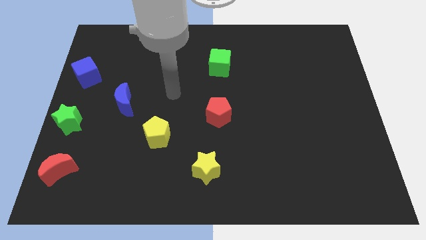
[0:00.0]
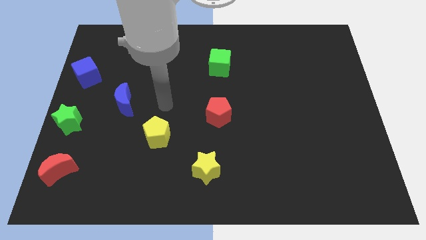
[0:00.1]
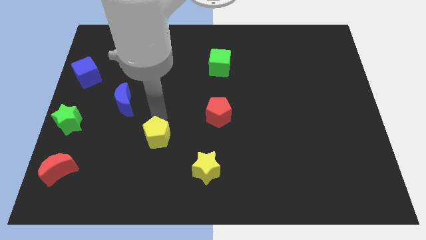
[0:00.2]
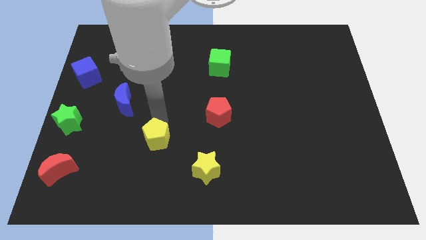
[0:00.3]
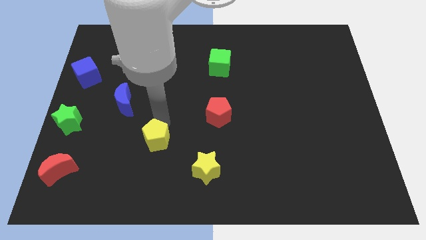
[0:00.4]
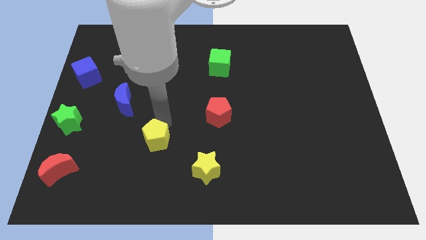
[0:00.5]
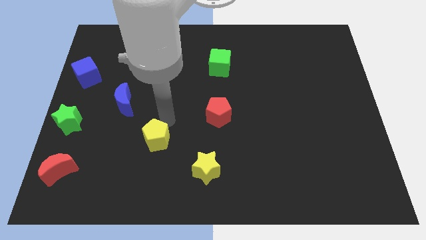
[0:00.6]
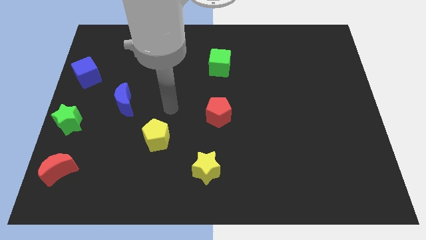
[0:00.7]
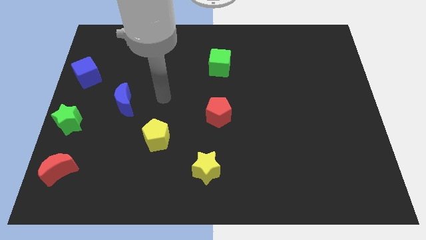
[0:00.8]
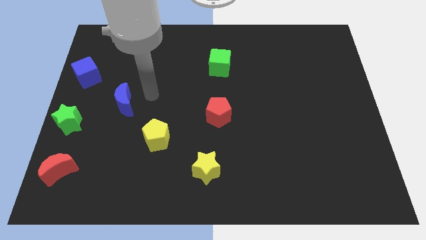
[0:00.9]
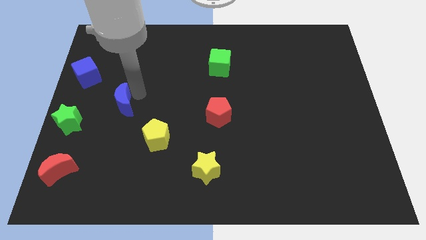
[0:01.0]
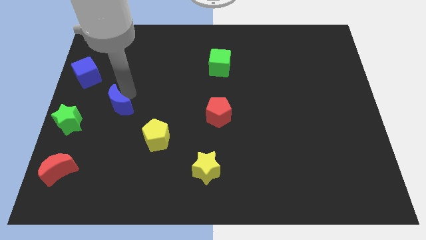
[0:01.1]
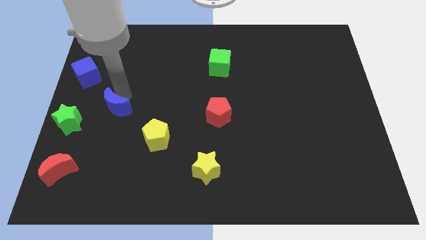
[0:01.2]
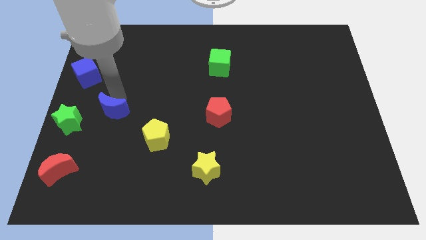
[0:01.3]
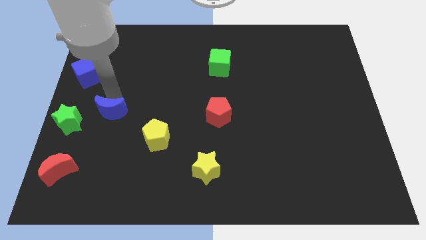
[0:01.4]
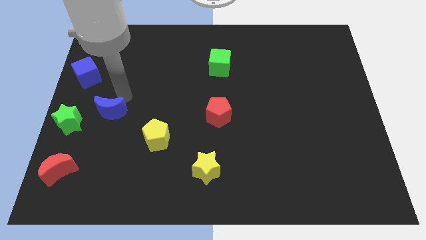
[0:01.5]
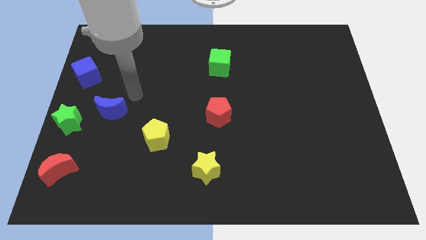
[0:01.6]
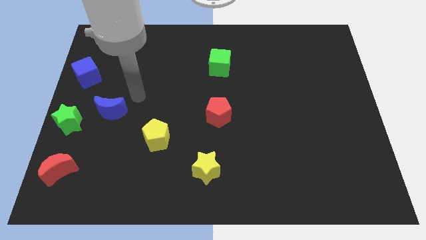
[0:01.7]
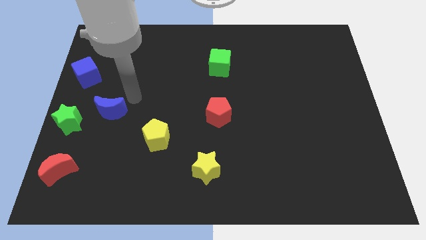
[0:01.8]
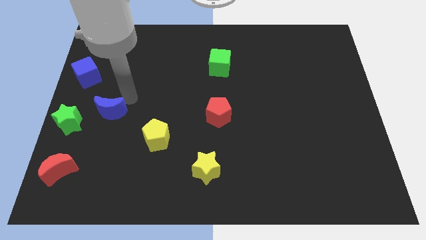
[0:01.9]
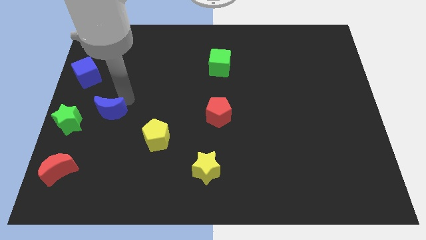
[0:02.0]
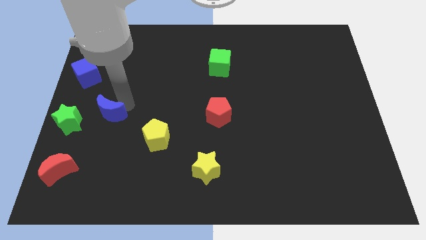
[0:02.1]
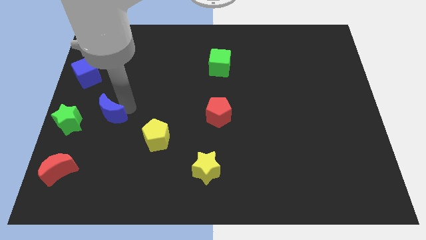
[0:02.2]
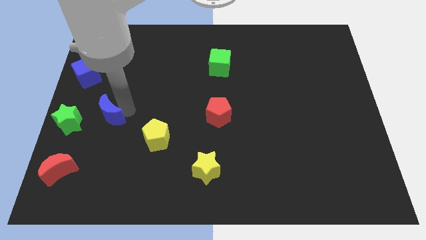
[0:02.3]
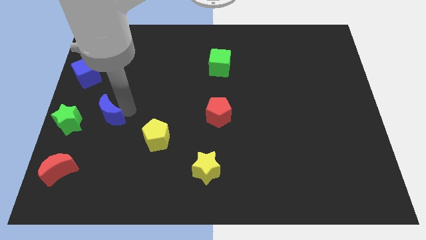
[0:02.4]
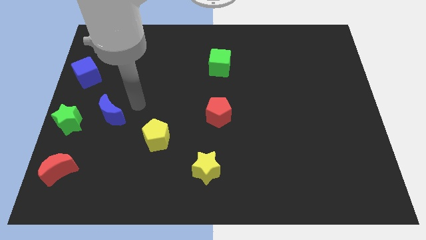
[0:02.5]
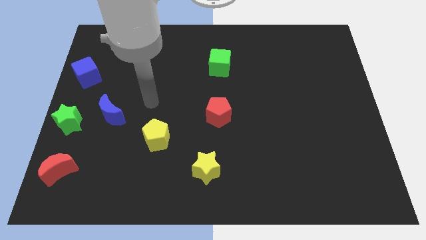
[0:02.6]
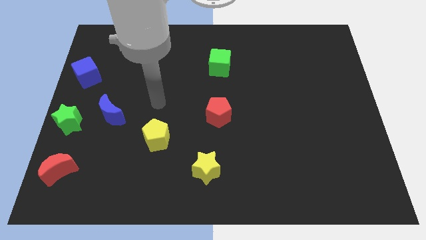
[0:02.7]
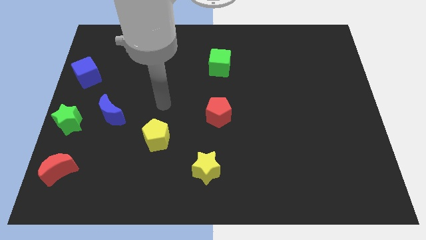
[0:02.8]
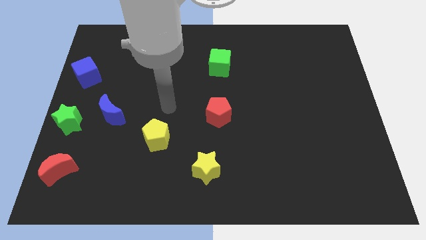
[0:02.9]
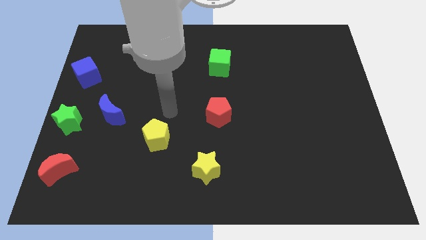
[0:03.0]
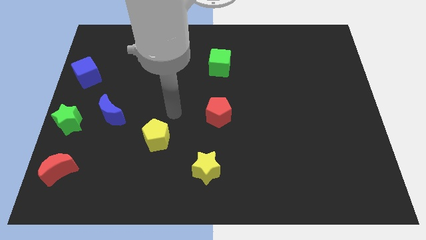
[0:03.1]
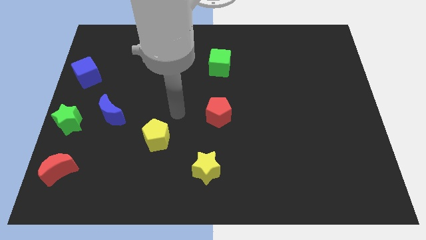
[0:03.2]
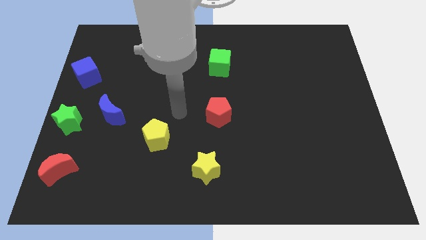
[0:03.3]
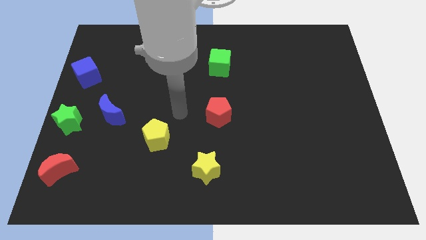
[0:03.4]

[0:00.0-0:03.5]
slightly move the blue crescent towards green star

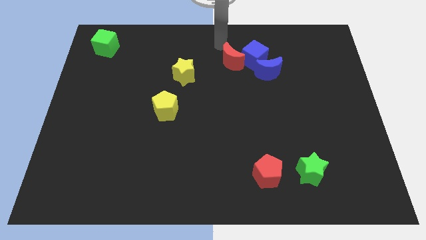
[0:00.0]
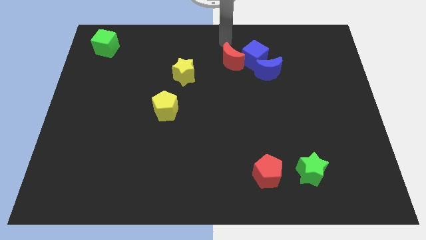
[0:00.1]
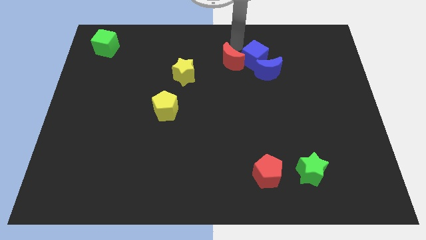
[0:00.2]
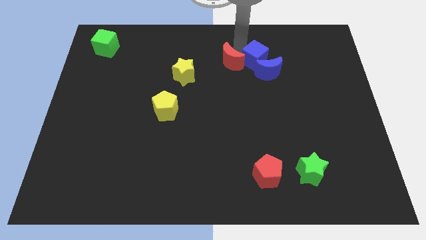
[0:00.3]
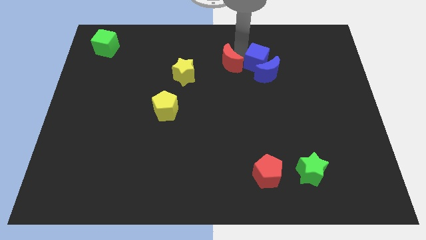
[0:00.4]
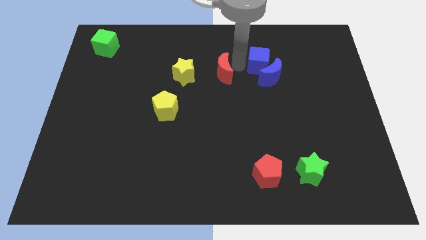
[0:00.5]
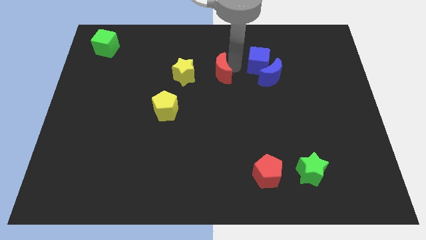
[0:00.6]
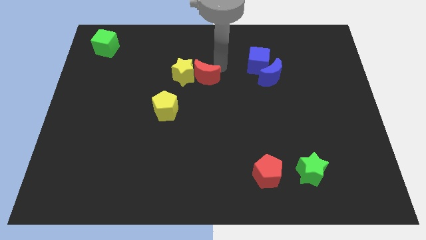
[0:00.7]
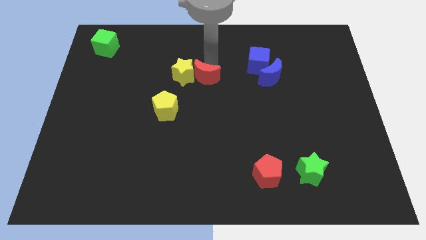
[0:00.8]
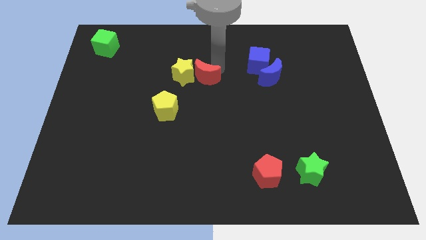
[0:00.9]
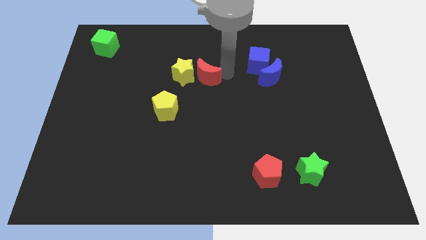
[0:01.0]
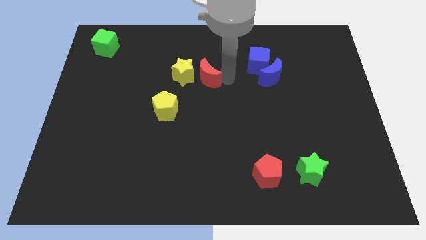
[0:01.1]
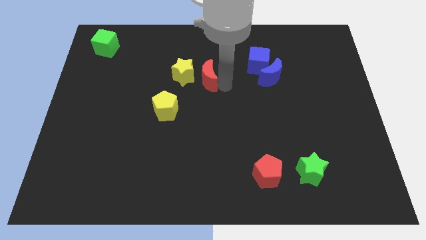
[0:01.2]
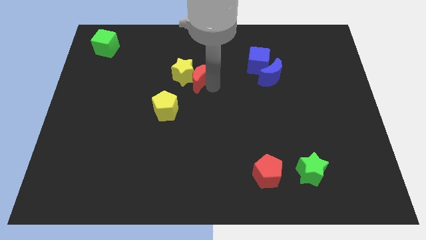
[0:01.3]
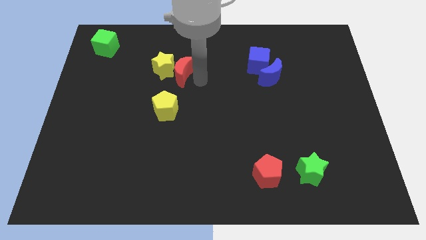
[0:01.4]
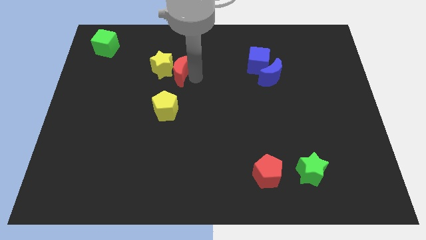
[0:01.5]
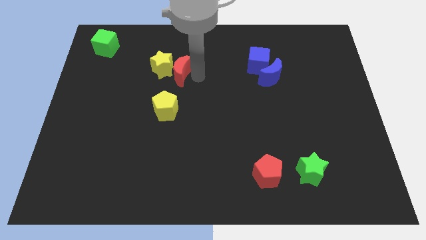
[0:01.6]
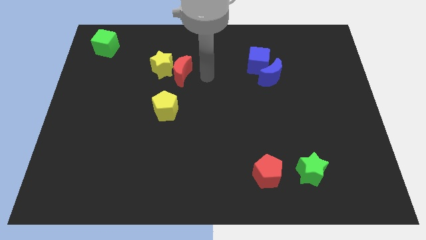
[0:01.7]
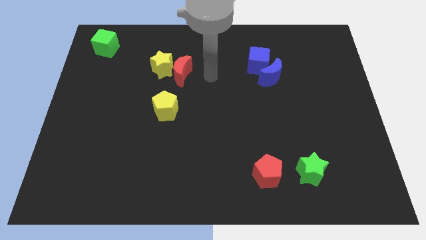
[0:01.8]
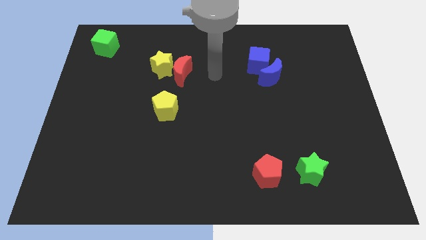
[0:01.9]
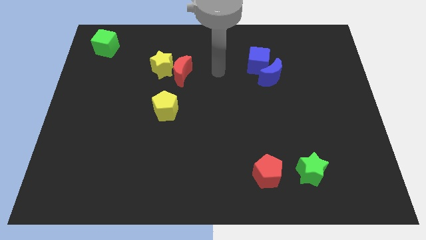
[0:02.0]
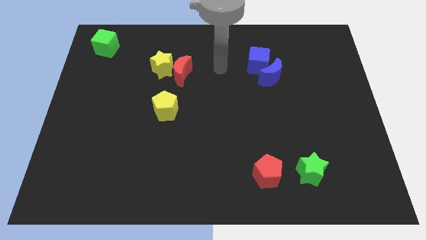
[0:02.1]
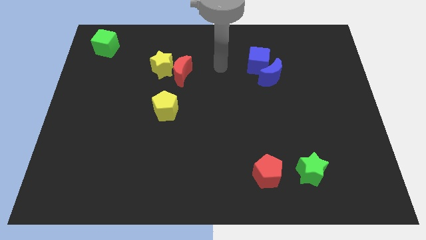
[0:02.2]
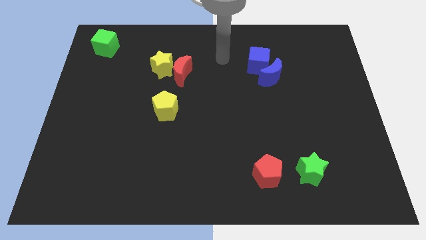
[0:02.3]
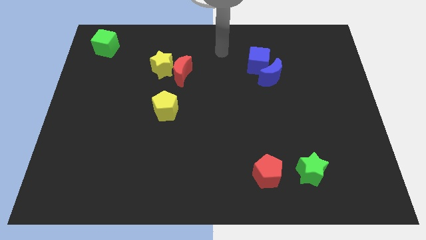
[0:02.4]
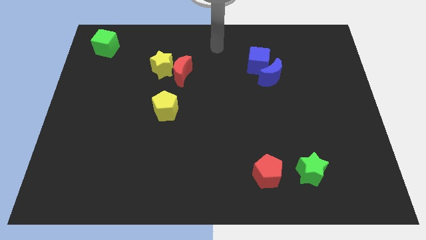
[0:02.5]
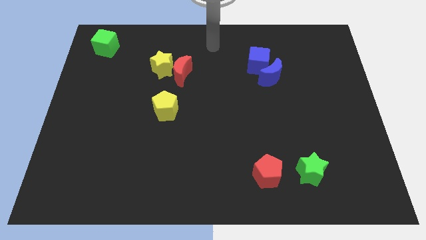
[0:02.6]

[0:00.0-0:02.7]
place the red crescent beside the yellow star

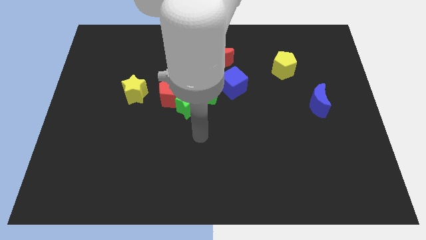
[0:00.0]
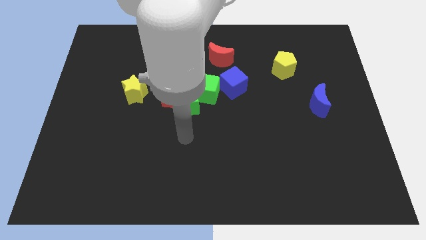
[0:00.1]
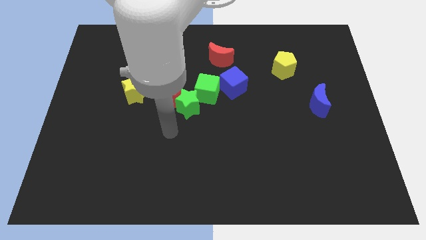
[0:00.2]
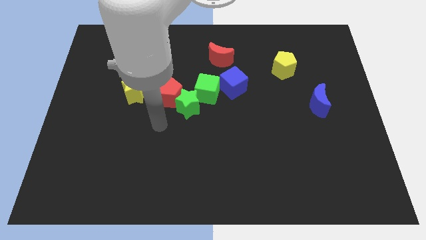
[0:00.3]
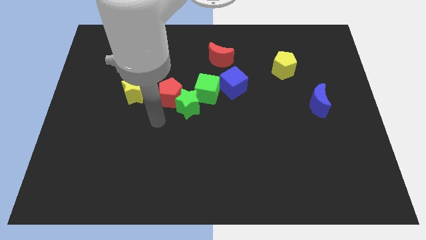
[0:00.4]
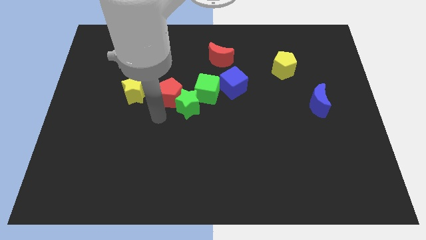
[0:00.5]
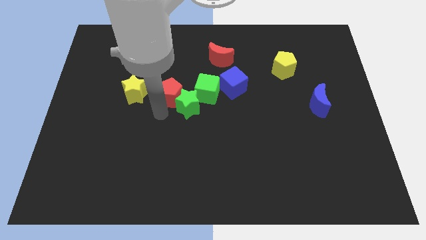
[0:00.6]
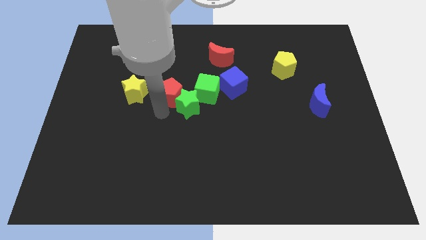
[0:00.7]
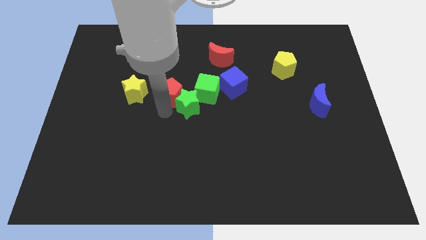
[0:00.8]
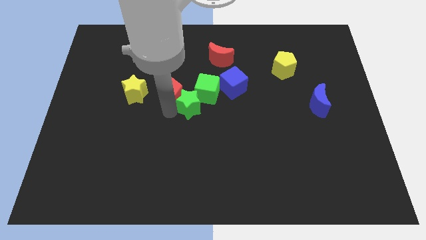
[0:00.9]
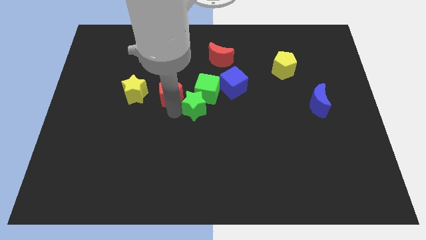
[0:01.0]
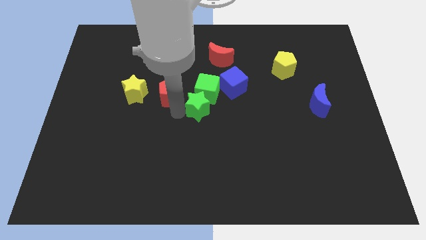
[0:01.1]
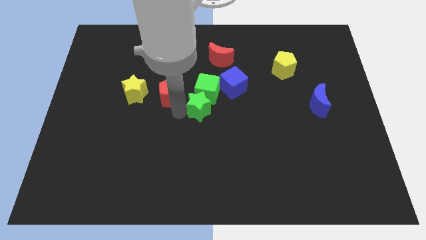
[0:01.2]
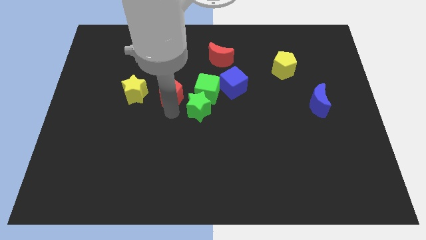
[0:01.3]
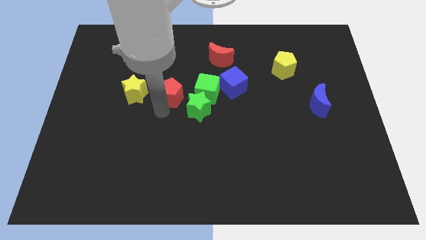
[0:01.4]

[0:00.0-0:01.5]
separate the green star and redpentagon

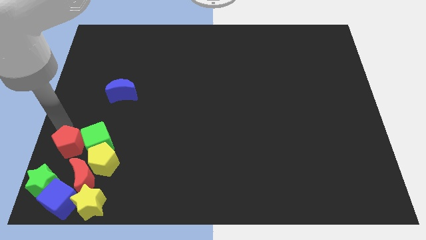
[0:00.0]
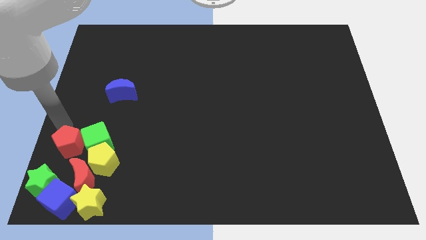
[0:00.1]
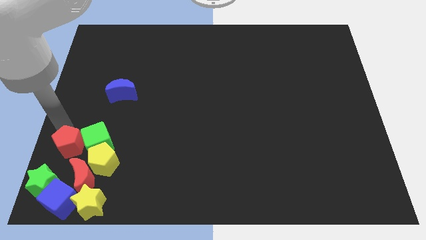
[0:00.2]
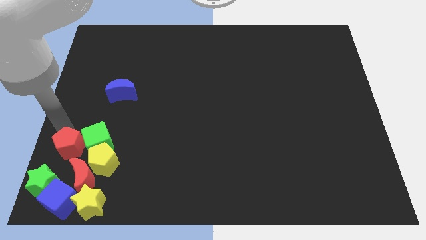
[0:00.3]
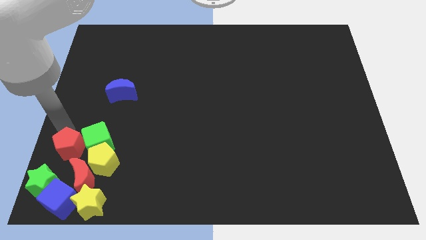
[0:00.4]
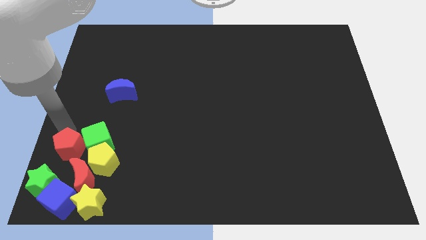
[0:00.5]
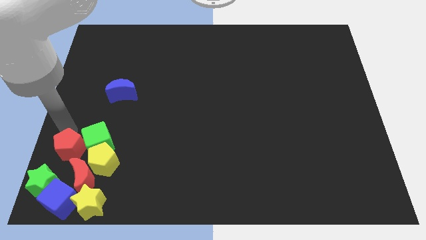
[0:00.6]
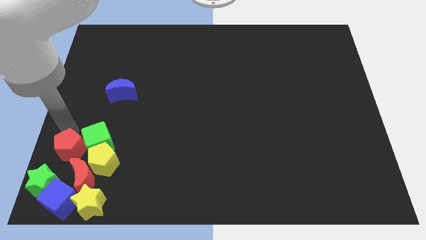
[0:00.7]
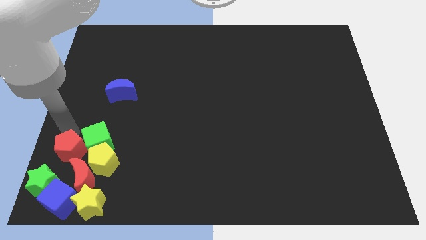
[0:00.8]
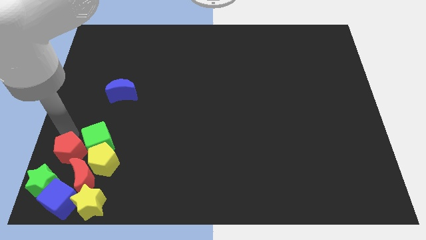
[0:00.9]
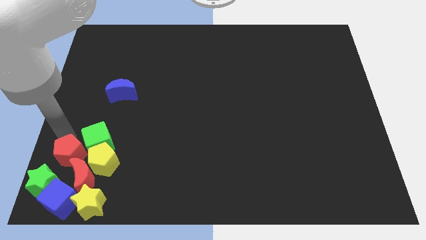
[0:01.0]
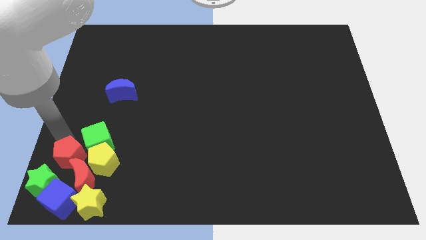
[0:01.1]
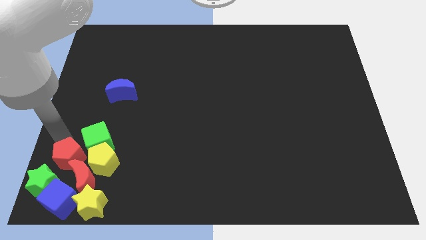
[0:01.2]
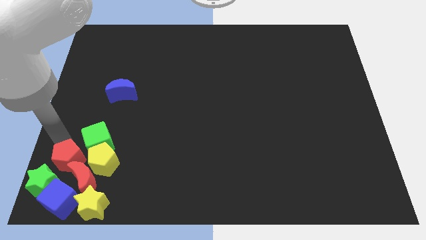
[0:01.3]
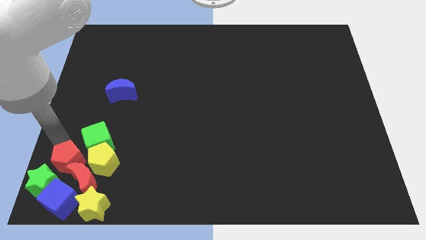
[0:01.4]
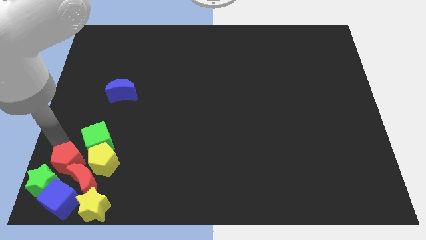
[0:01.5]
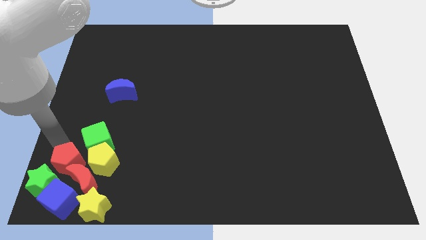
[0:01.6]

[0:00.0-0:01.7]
move red pentagon into red moon
